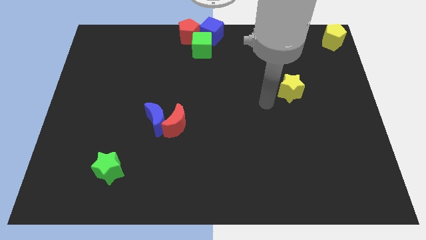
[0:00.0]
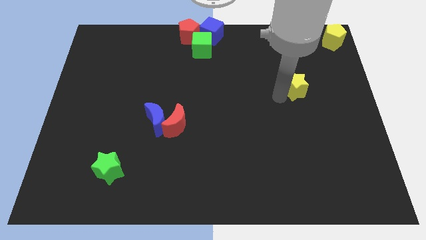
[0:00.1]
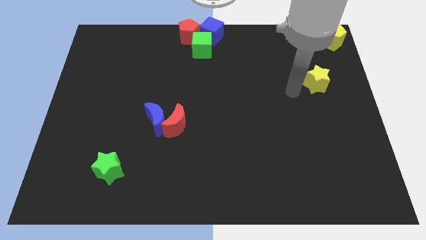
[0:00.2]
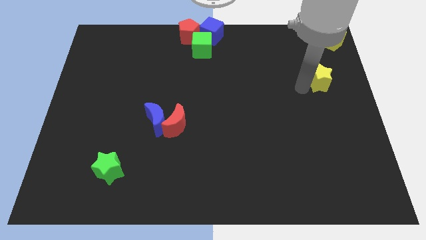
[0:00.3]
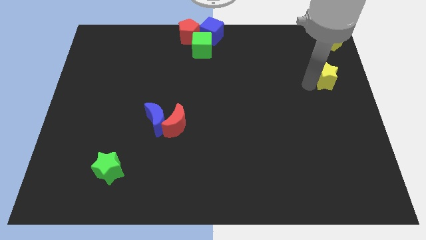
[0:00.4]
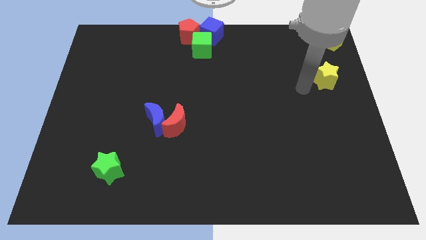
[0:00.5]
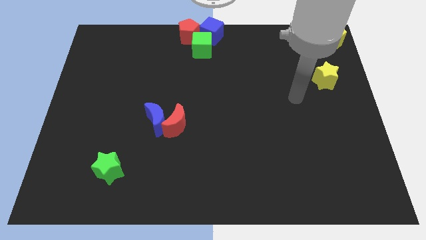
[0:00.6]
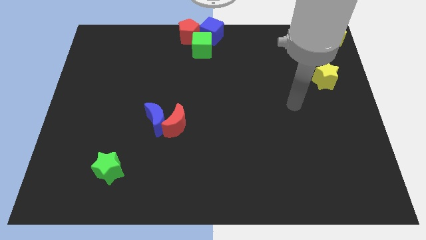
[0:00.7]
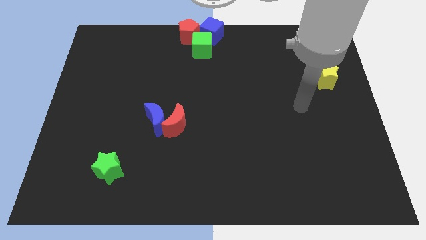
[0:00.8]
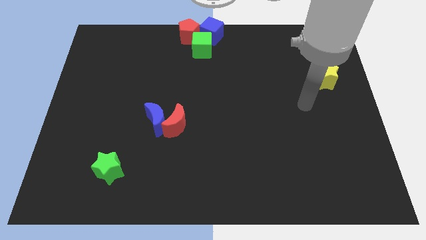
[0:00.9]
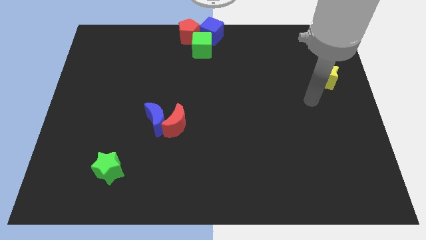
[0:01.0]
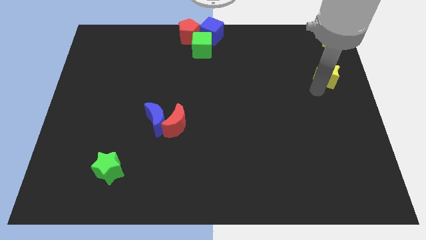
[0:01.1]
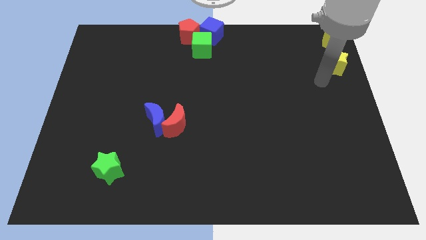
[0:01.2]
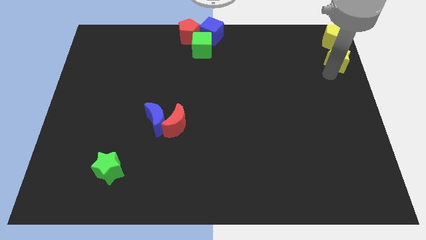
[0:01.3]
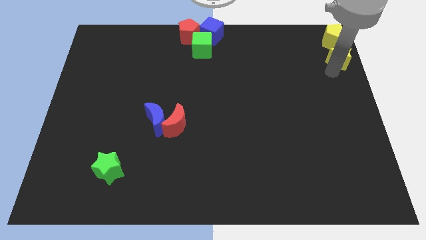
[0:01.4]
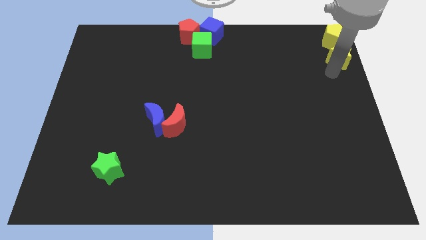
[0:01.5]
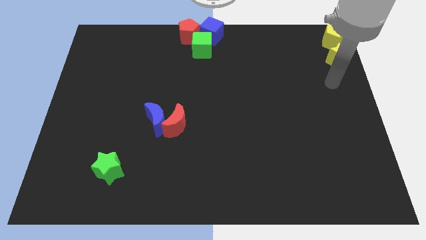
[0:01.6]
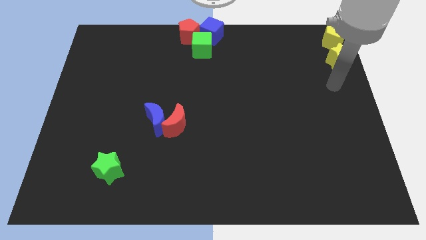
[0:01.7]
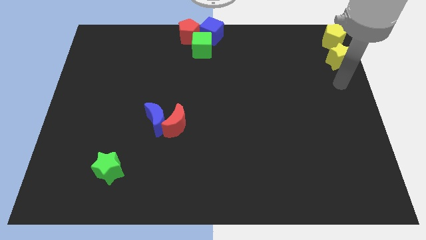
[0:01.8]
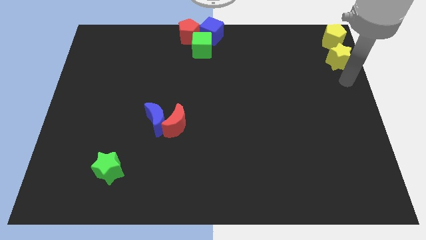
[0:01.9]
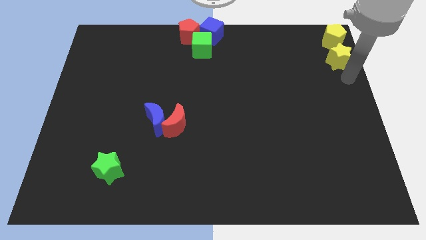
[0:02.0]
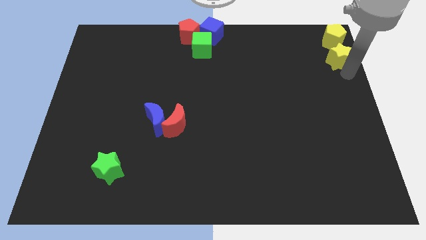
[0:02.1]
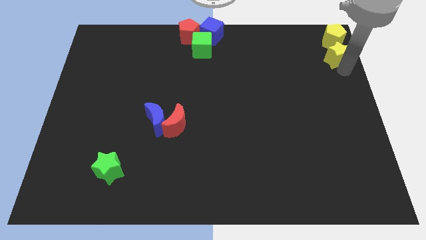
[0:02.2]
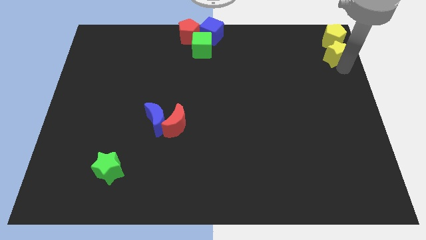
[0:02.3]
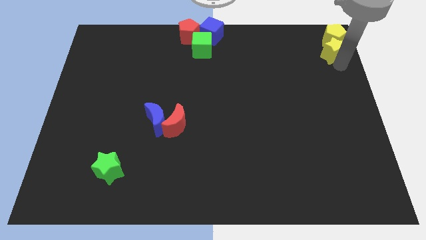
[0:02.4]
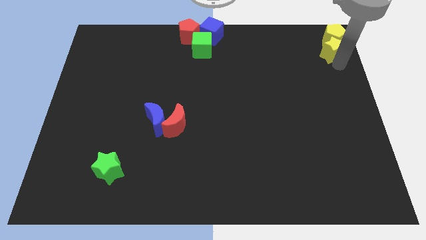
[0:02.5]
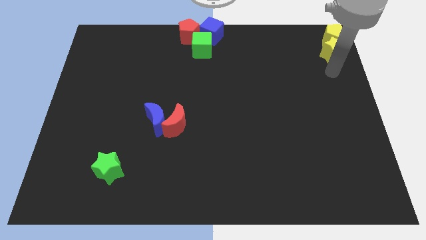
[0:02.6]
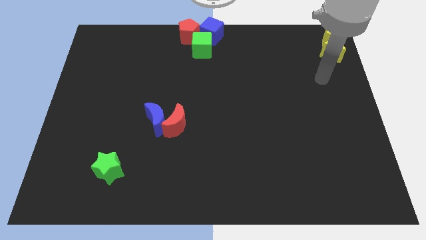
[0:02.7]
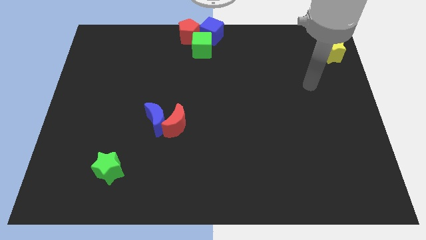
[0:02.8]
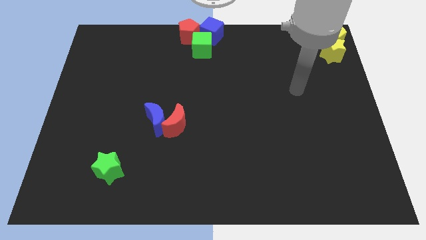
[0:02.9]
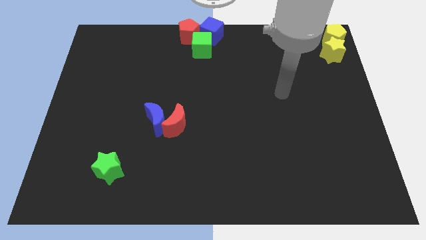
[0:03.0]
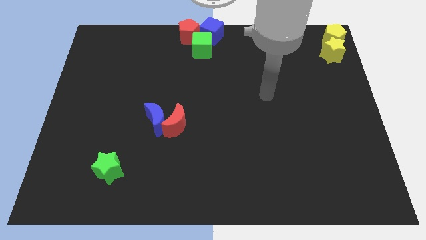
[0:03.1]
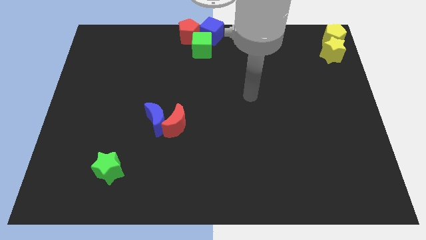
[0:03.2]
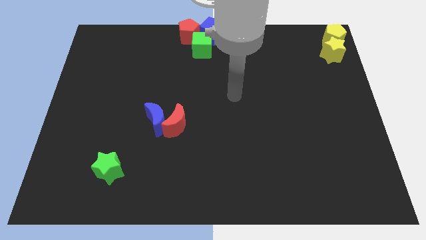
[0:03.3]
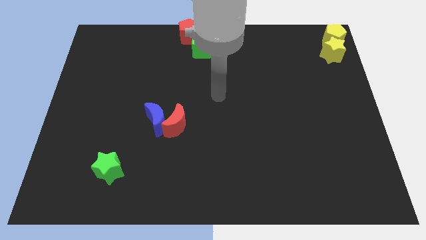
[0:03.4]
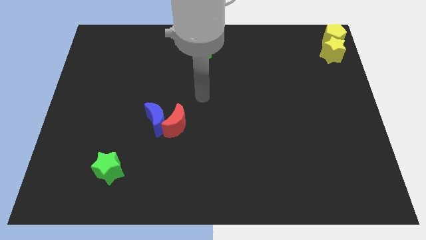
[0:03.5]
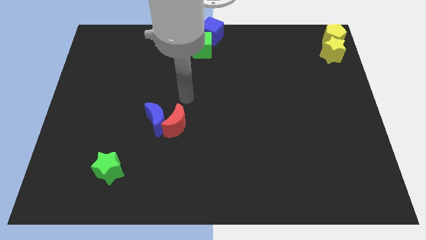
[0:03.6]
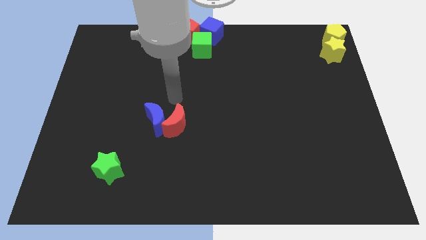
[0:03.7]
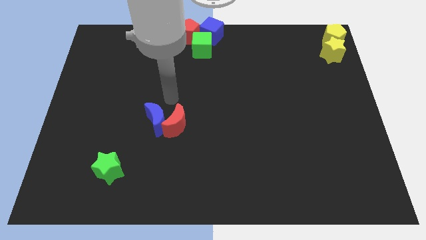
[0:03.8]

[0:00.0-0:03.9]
push the yellow star into the yellow pentagon

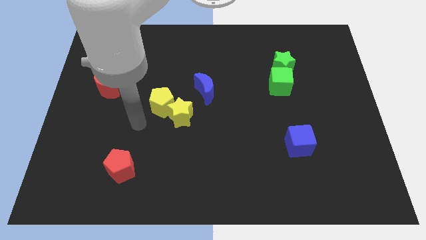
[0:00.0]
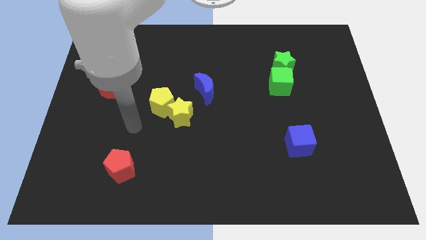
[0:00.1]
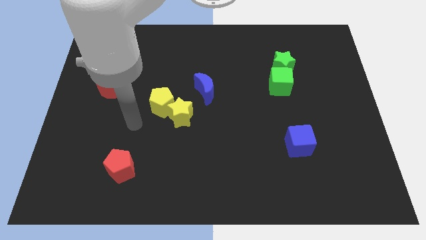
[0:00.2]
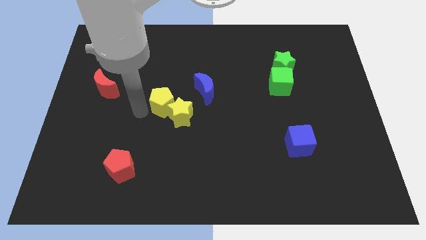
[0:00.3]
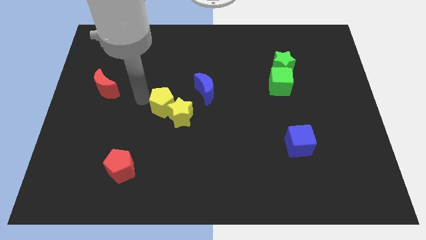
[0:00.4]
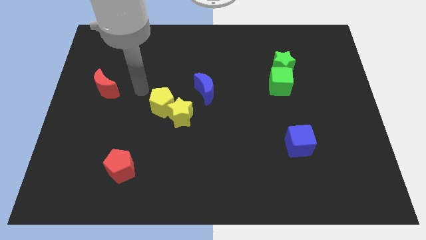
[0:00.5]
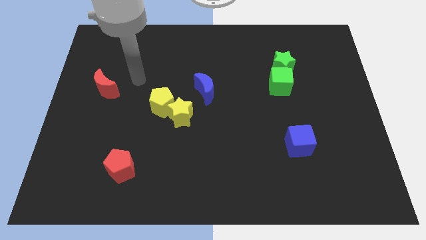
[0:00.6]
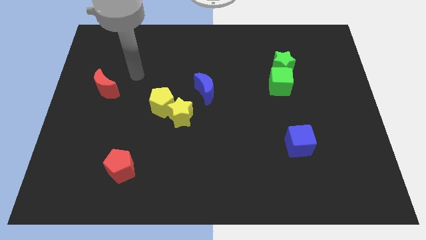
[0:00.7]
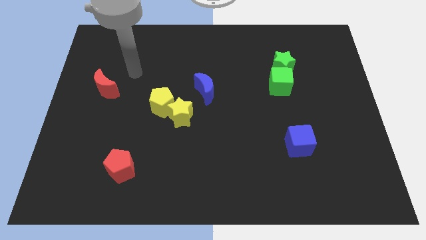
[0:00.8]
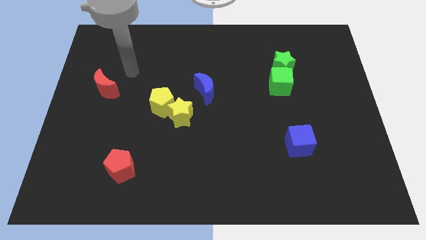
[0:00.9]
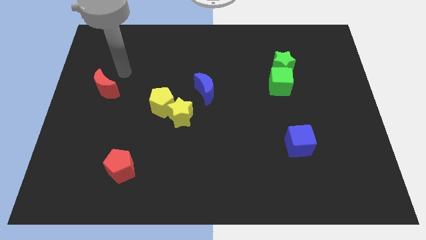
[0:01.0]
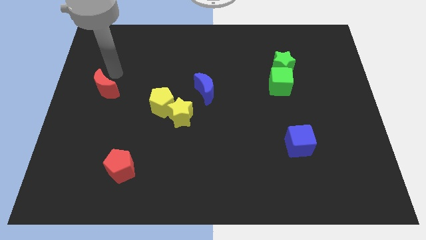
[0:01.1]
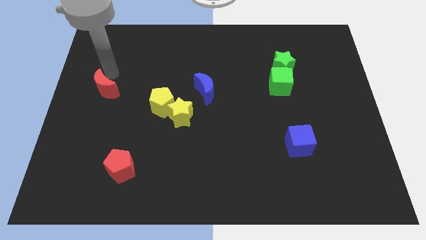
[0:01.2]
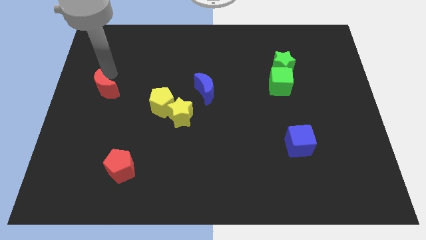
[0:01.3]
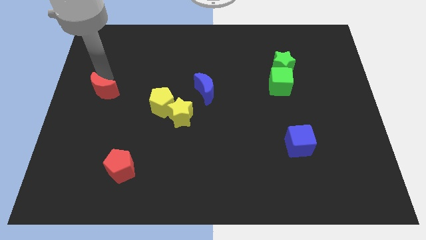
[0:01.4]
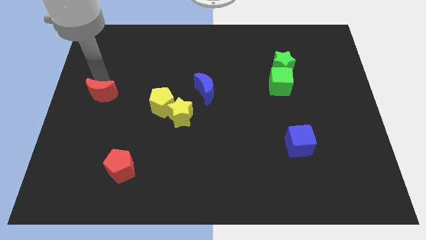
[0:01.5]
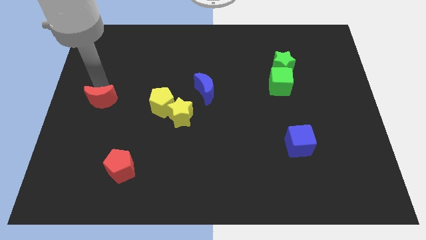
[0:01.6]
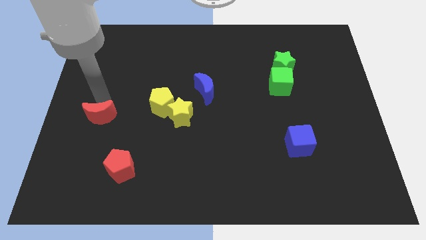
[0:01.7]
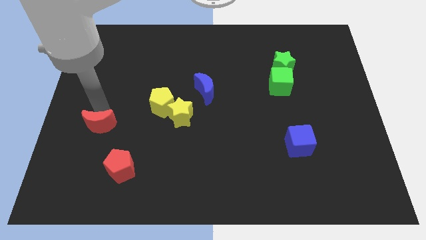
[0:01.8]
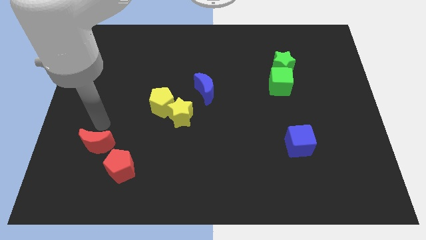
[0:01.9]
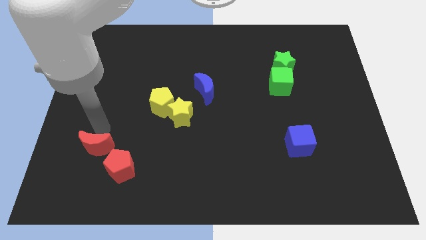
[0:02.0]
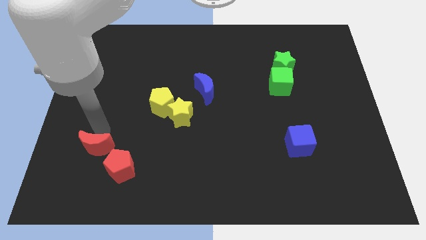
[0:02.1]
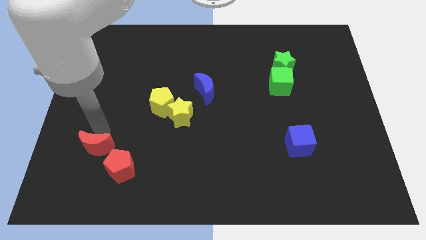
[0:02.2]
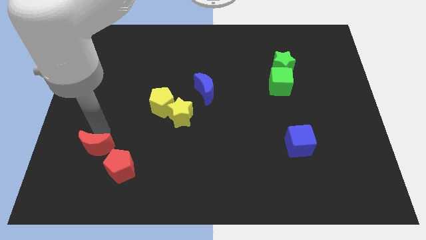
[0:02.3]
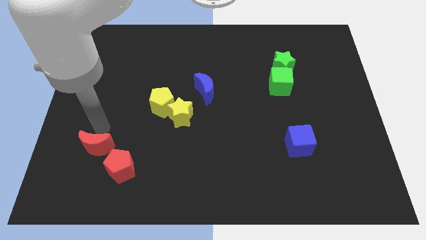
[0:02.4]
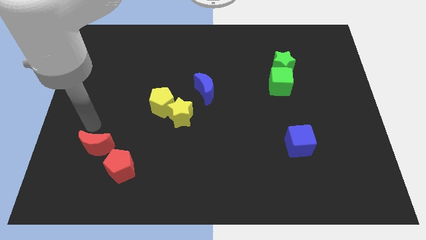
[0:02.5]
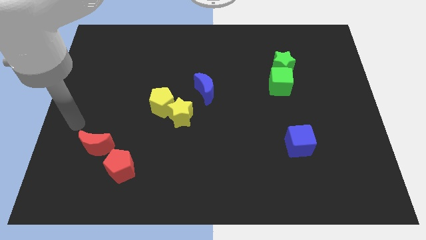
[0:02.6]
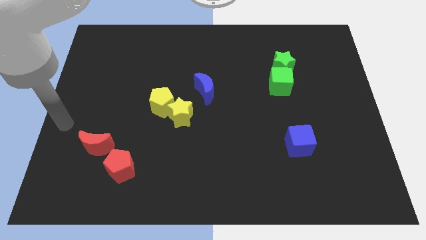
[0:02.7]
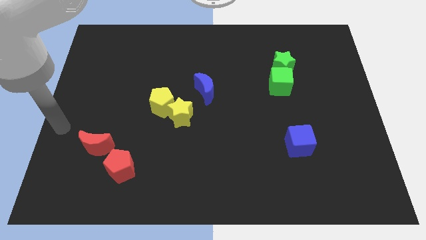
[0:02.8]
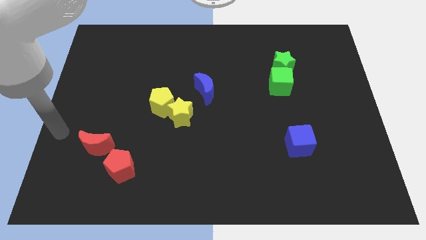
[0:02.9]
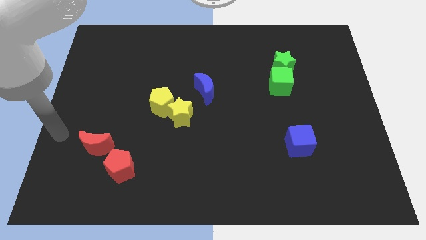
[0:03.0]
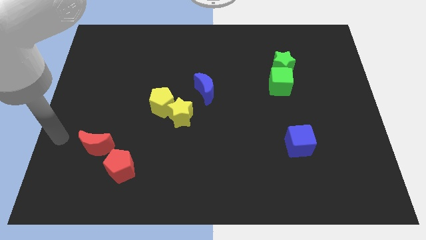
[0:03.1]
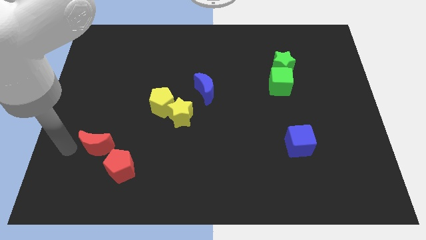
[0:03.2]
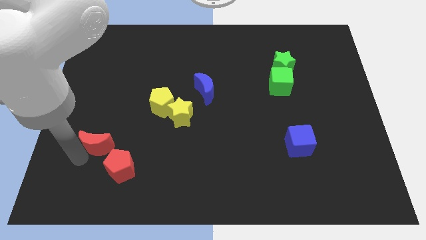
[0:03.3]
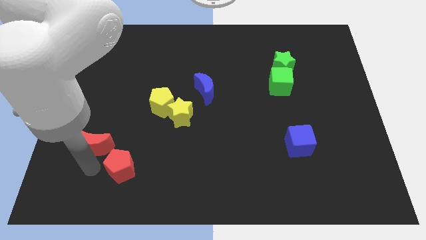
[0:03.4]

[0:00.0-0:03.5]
go and push the red crescent towards red pentagon

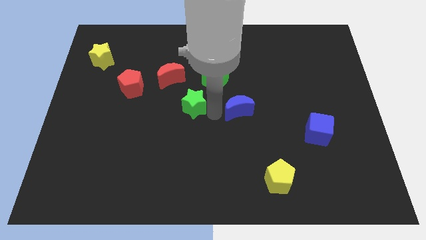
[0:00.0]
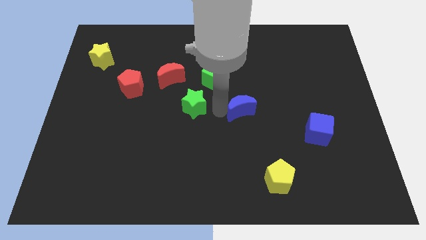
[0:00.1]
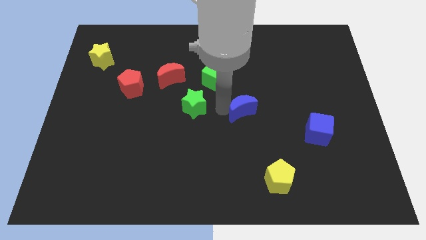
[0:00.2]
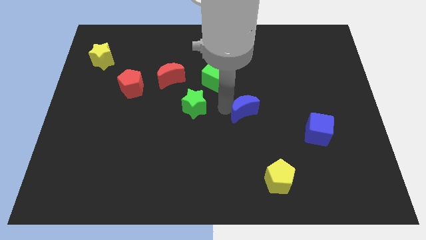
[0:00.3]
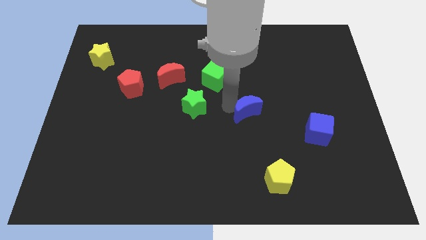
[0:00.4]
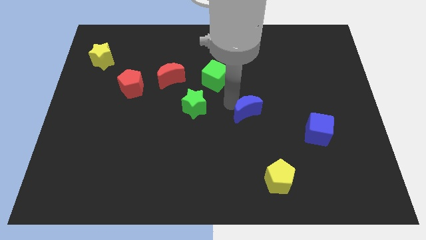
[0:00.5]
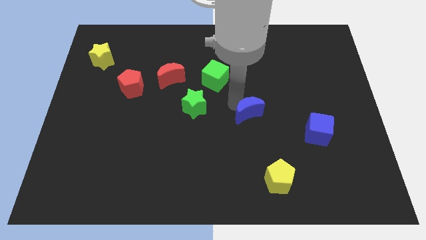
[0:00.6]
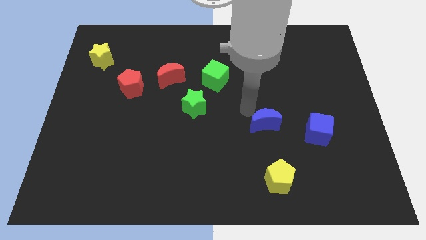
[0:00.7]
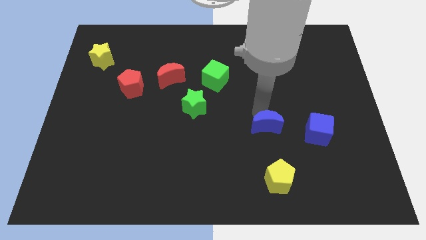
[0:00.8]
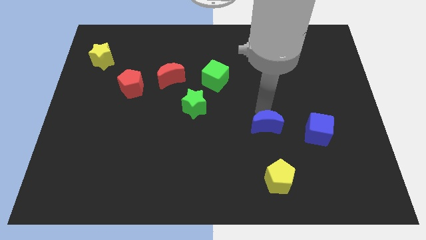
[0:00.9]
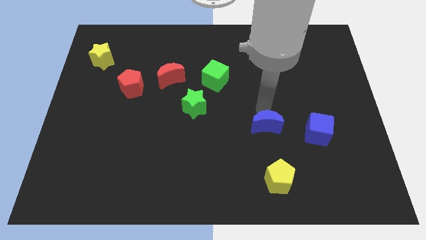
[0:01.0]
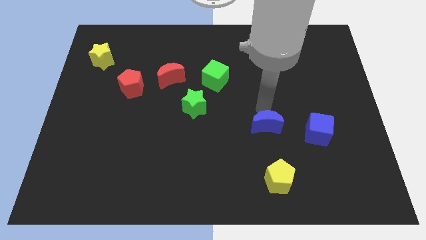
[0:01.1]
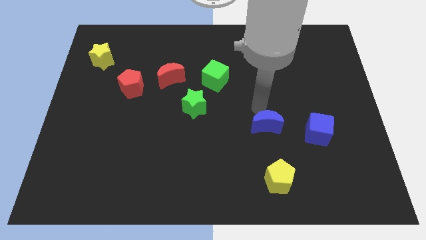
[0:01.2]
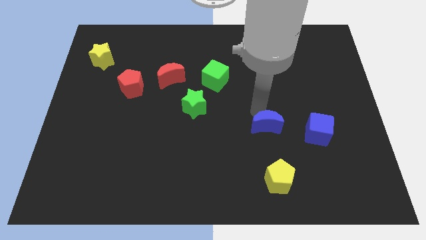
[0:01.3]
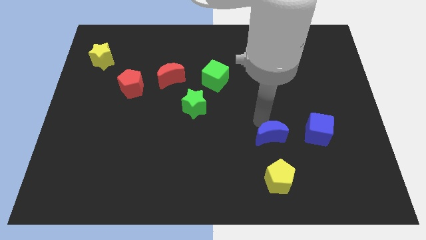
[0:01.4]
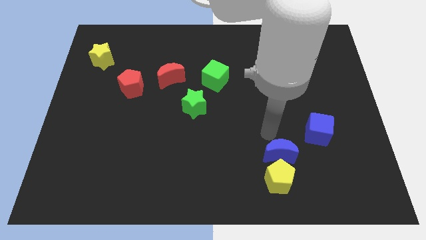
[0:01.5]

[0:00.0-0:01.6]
move the blue crescent above the yellow pentagon
